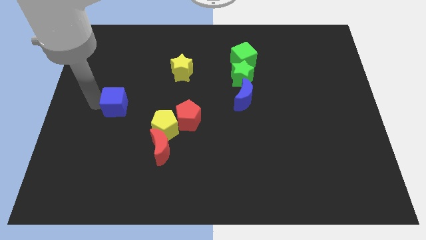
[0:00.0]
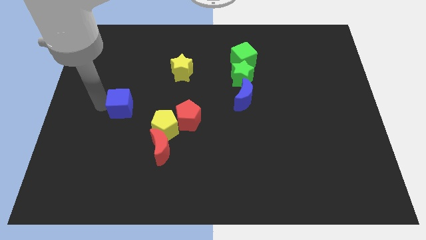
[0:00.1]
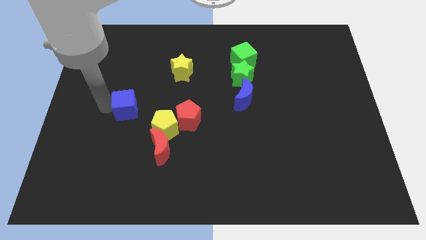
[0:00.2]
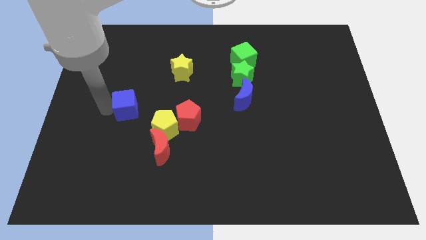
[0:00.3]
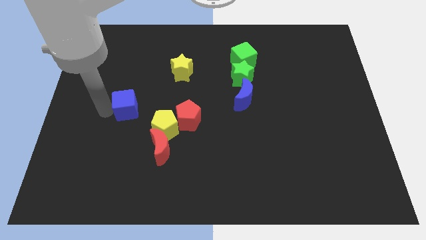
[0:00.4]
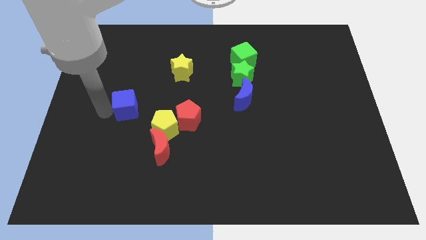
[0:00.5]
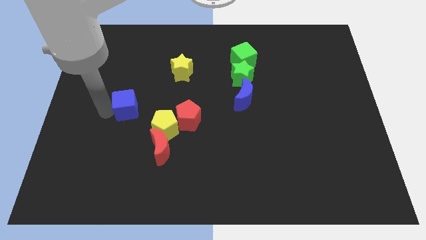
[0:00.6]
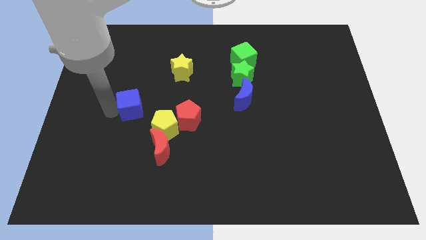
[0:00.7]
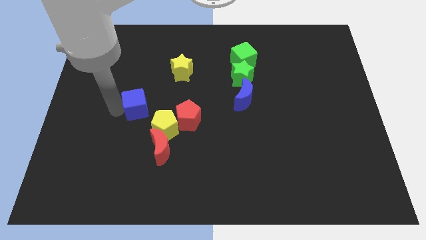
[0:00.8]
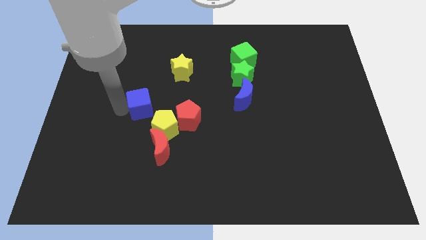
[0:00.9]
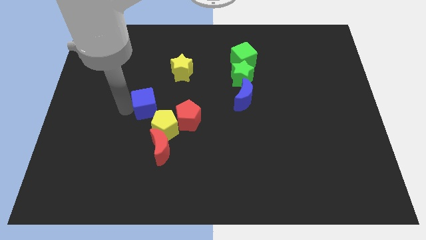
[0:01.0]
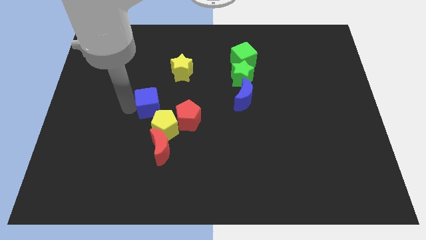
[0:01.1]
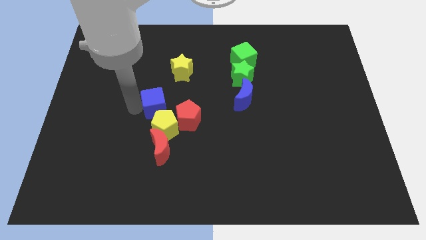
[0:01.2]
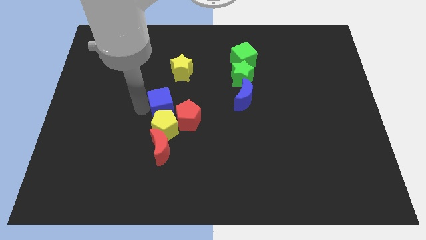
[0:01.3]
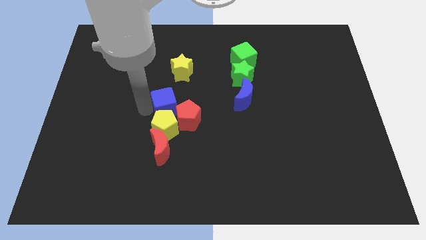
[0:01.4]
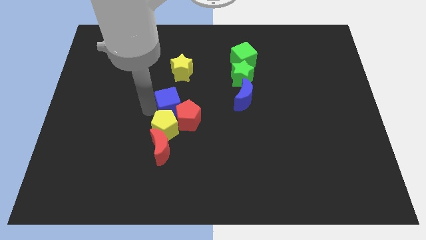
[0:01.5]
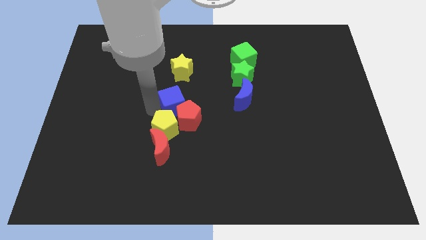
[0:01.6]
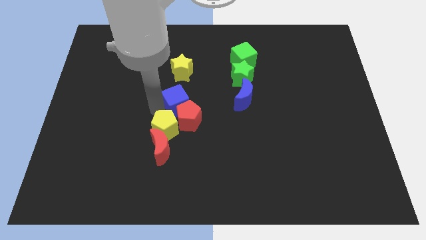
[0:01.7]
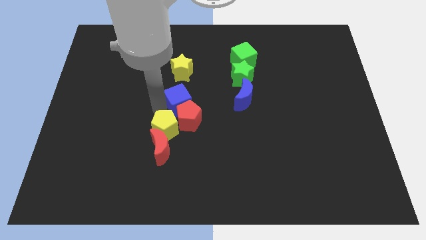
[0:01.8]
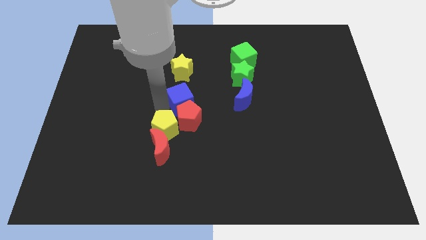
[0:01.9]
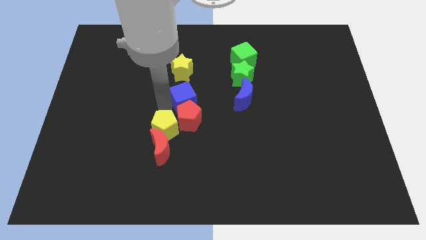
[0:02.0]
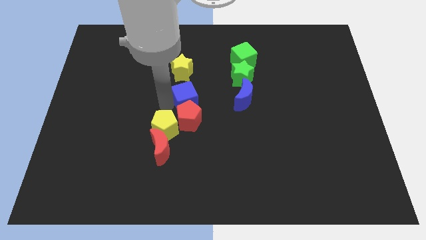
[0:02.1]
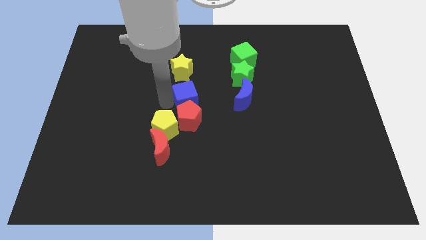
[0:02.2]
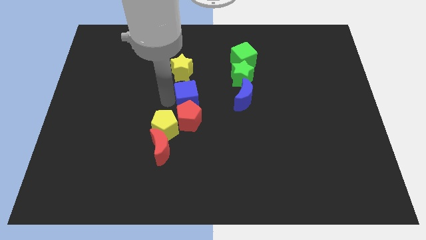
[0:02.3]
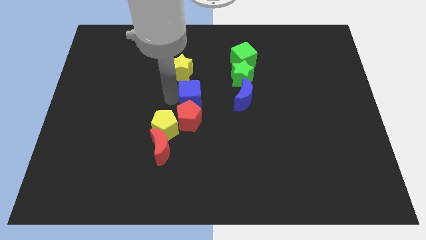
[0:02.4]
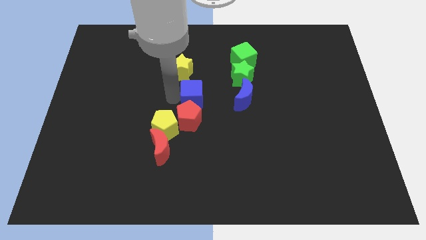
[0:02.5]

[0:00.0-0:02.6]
move the blue cube towards the blue crescent

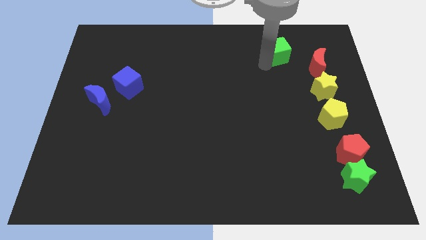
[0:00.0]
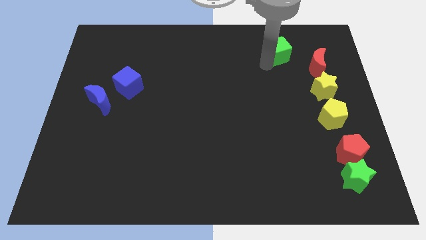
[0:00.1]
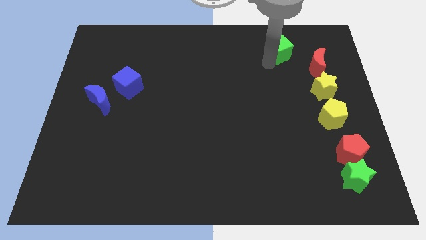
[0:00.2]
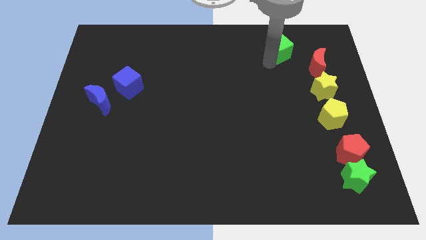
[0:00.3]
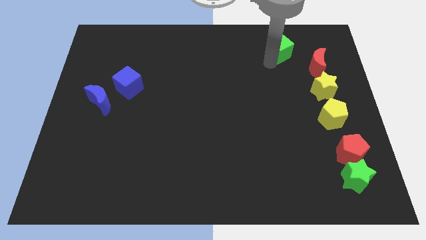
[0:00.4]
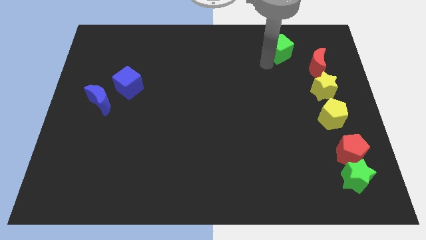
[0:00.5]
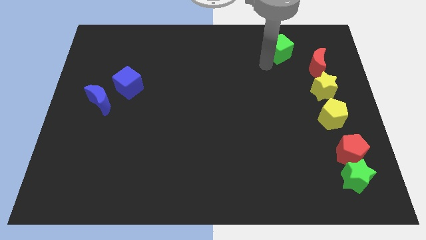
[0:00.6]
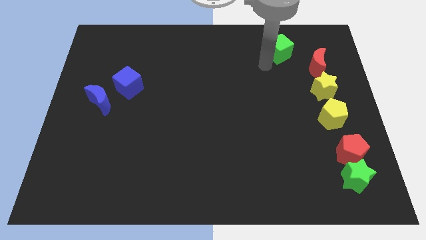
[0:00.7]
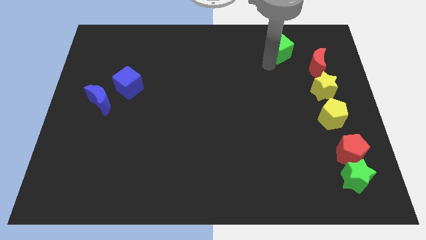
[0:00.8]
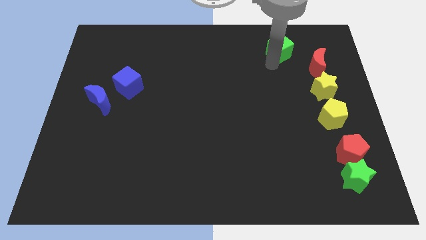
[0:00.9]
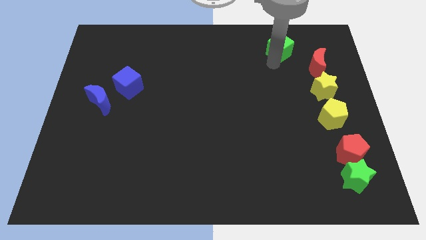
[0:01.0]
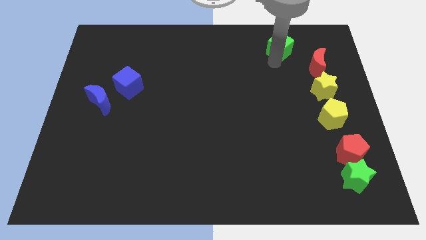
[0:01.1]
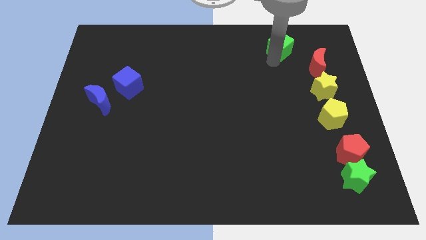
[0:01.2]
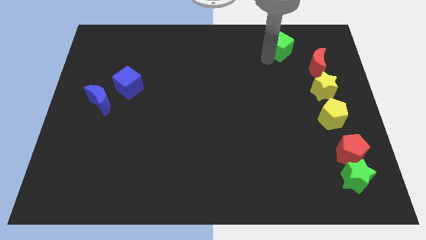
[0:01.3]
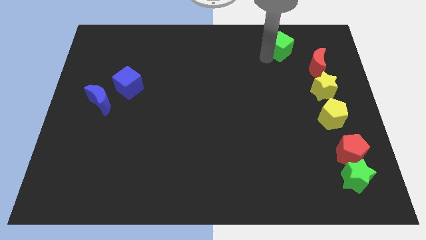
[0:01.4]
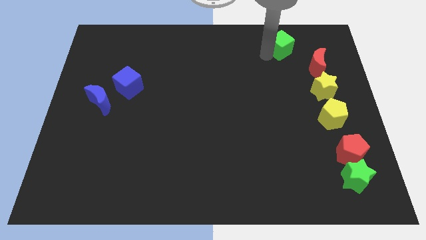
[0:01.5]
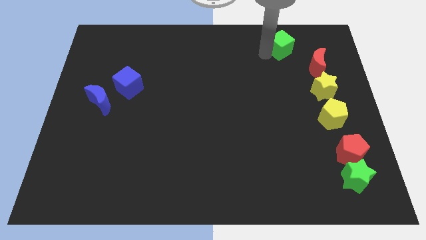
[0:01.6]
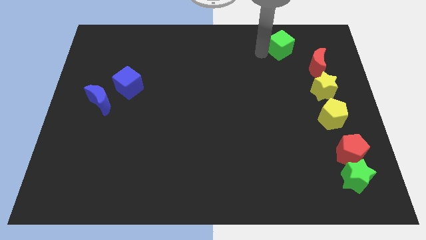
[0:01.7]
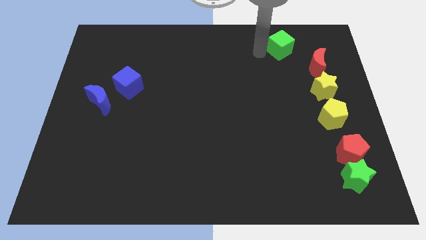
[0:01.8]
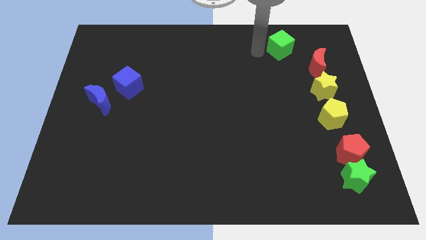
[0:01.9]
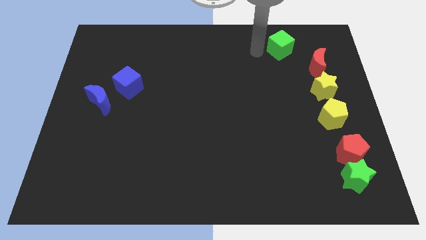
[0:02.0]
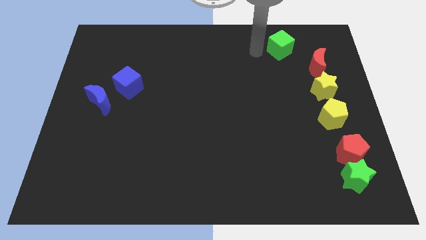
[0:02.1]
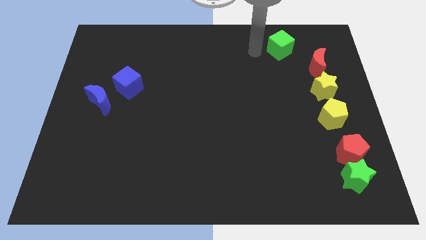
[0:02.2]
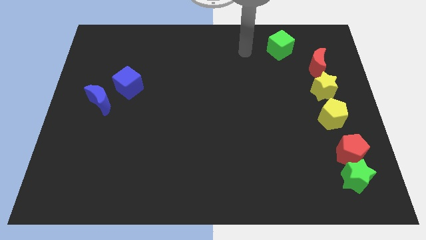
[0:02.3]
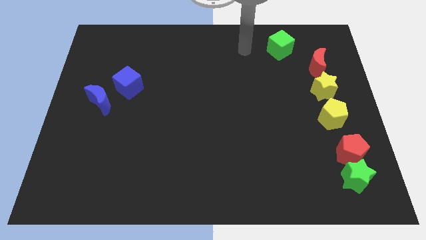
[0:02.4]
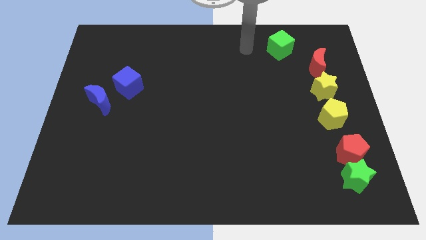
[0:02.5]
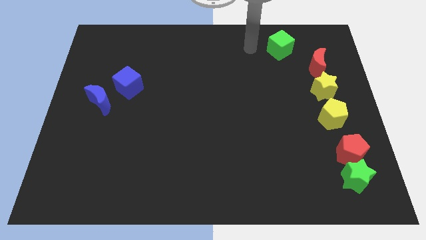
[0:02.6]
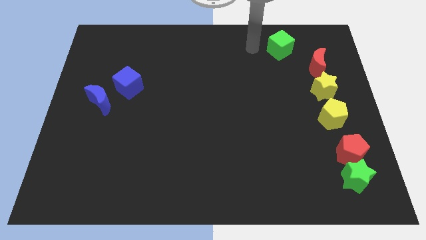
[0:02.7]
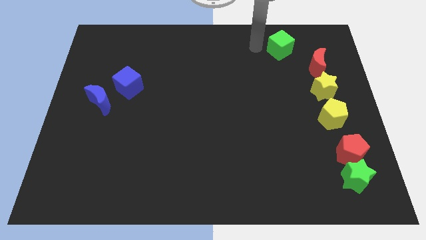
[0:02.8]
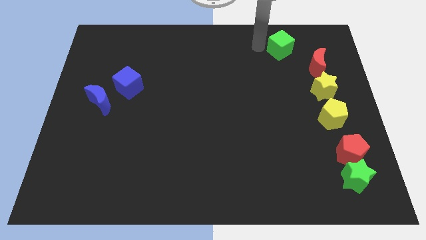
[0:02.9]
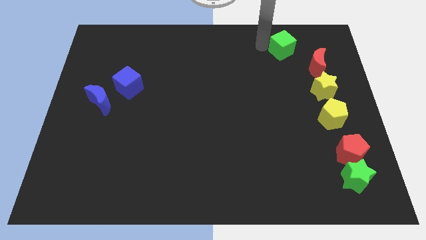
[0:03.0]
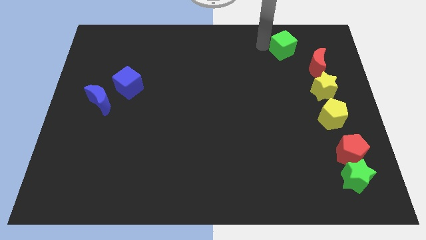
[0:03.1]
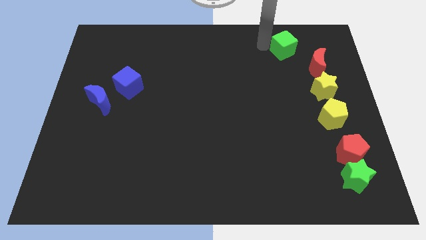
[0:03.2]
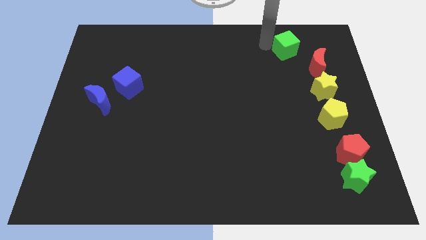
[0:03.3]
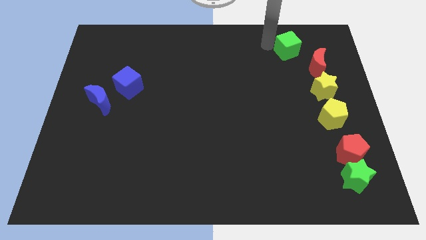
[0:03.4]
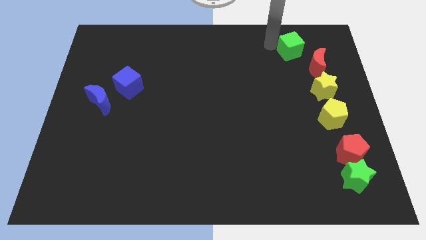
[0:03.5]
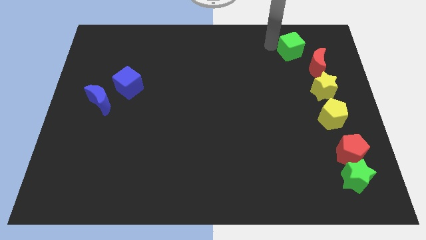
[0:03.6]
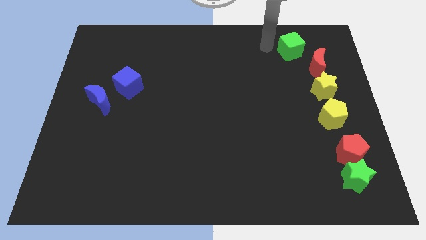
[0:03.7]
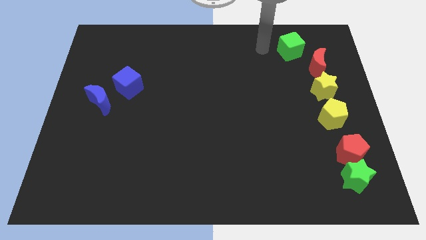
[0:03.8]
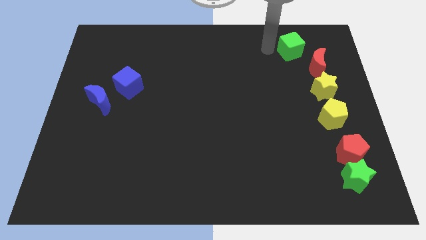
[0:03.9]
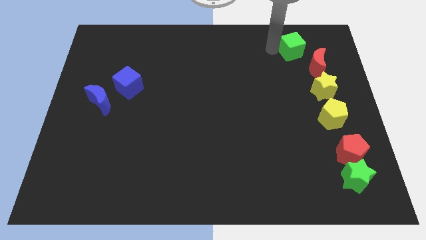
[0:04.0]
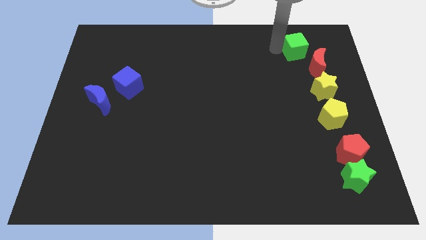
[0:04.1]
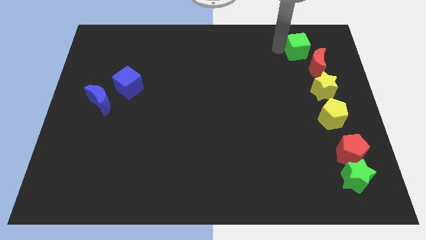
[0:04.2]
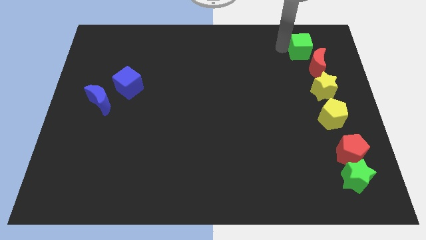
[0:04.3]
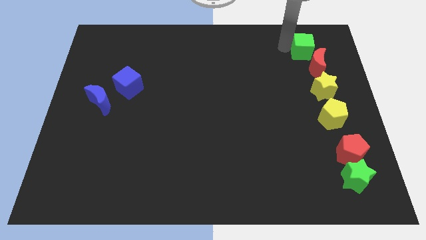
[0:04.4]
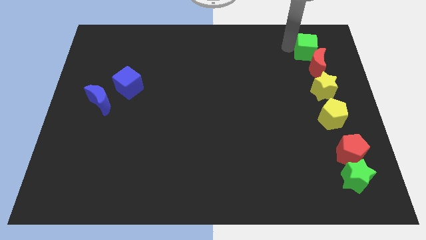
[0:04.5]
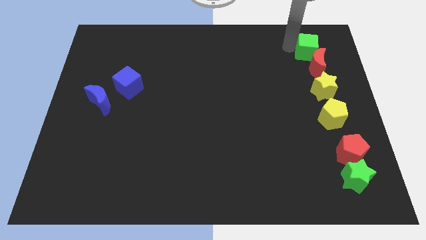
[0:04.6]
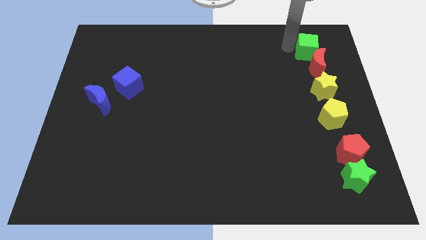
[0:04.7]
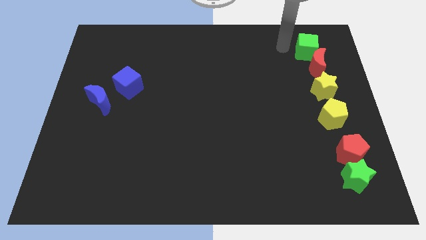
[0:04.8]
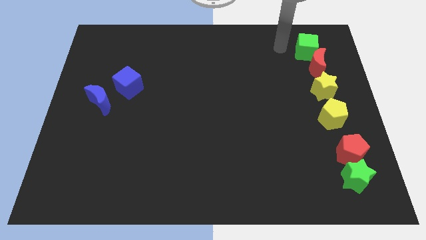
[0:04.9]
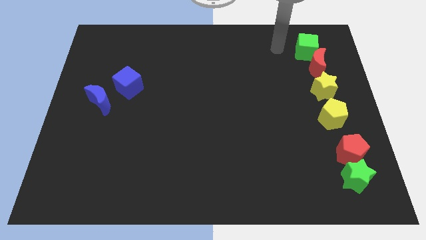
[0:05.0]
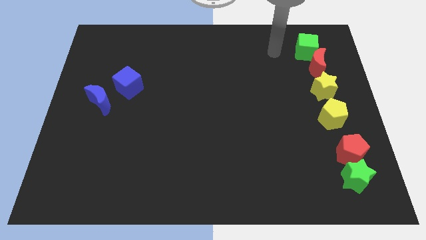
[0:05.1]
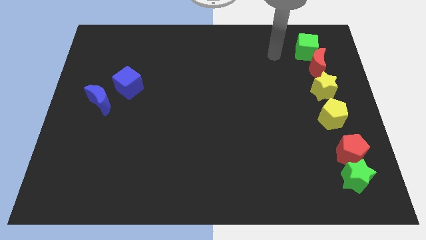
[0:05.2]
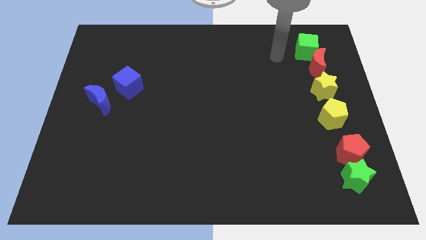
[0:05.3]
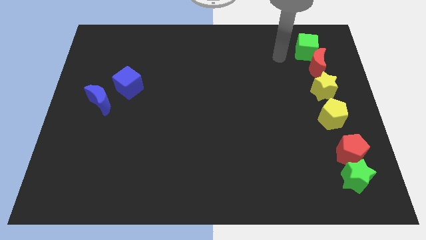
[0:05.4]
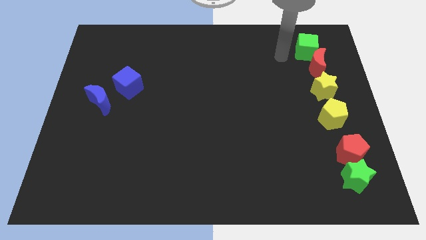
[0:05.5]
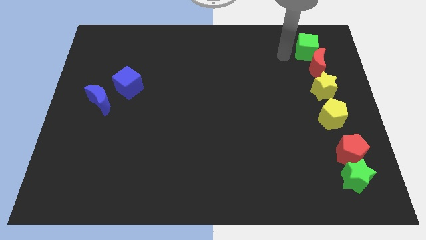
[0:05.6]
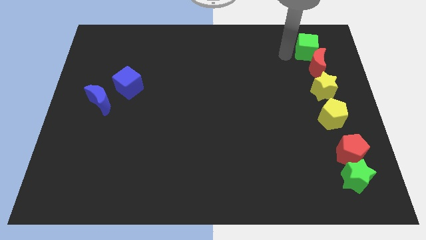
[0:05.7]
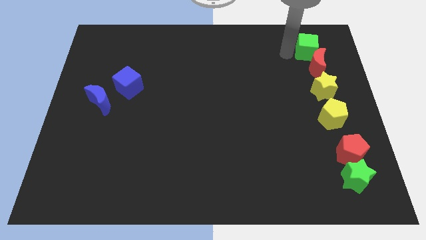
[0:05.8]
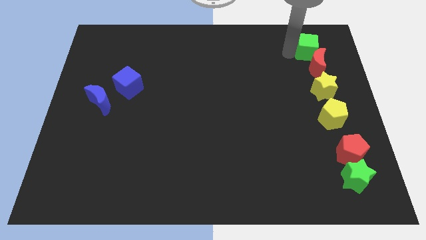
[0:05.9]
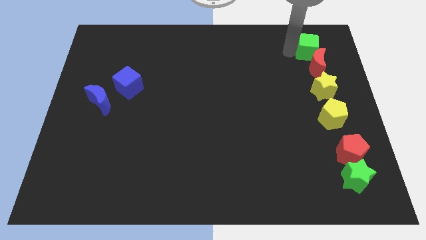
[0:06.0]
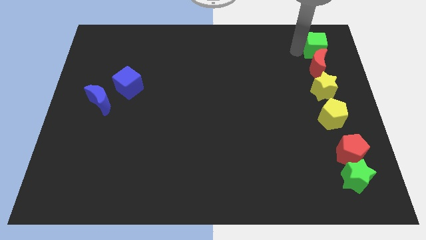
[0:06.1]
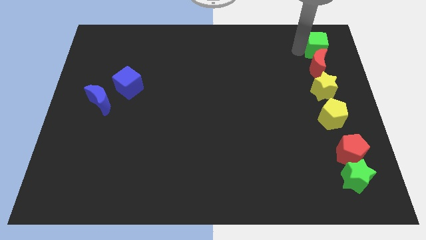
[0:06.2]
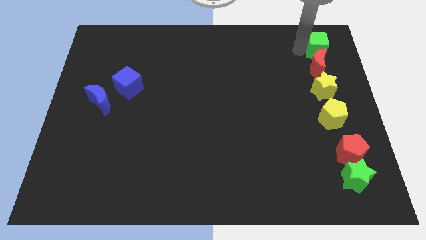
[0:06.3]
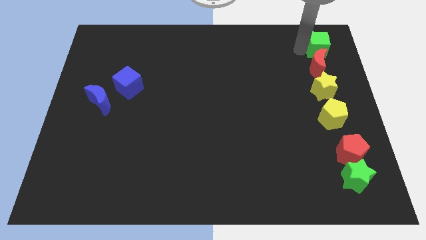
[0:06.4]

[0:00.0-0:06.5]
place the green cube above the red crescent
